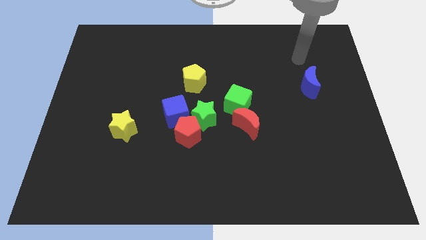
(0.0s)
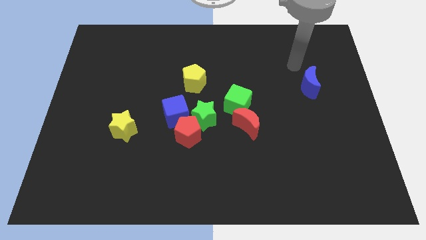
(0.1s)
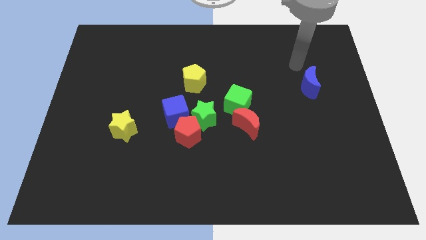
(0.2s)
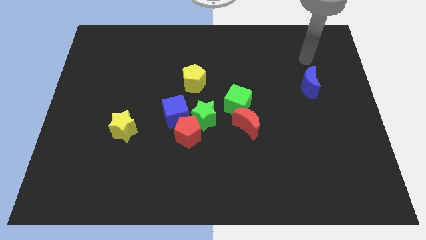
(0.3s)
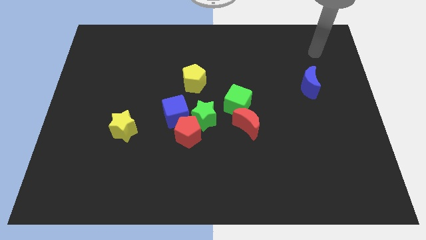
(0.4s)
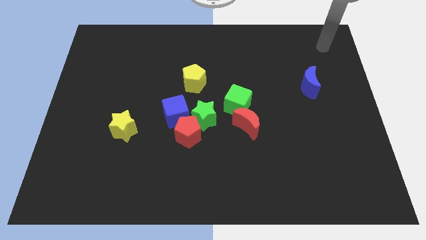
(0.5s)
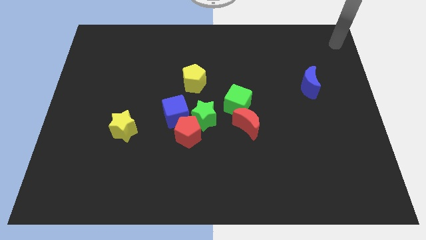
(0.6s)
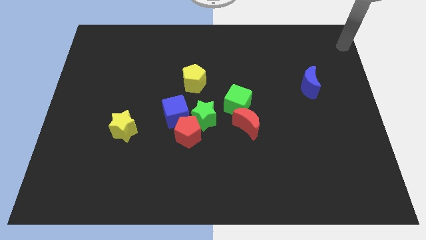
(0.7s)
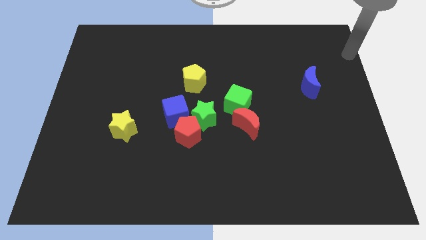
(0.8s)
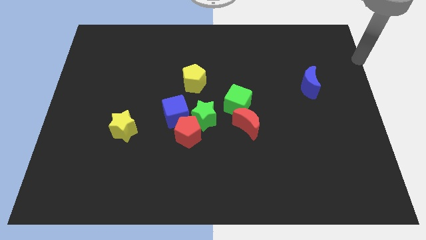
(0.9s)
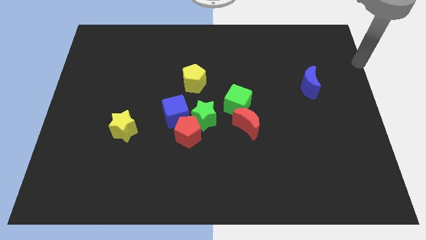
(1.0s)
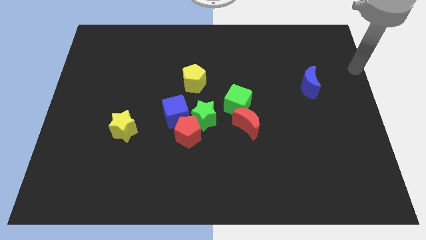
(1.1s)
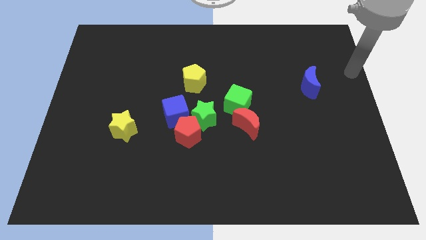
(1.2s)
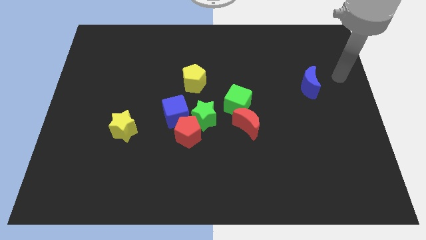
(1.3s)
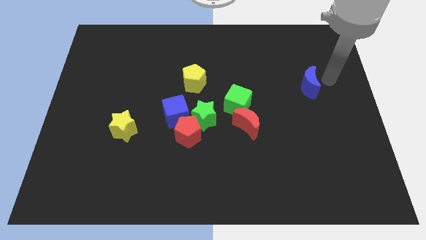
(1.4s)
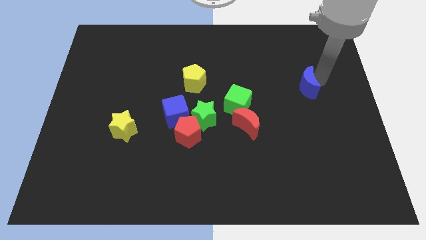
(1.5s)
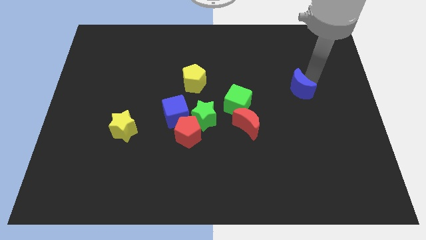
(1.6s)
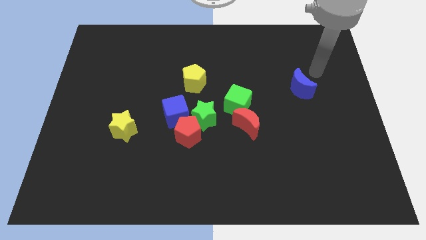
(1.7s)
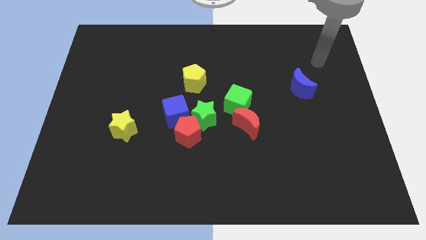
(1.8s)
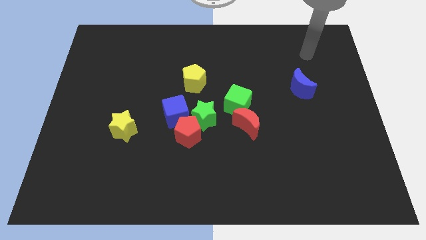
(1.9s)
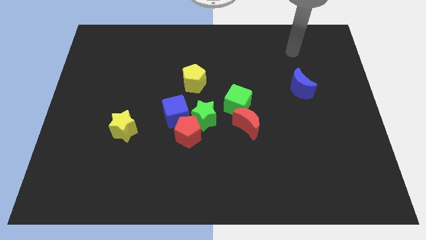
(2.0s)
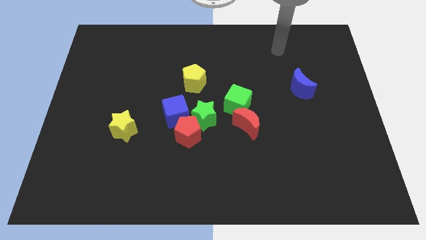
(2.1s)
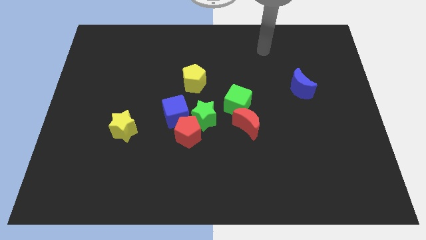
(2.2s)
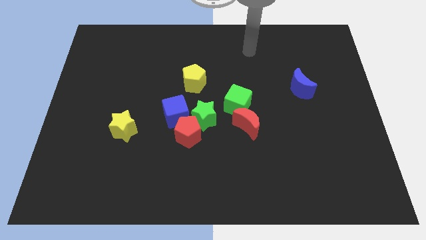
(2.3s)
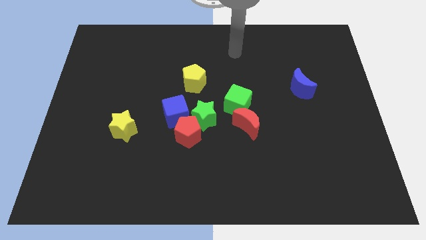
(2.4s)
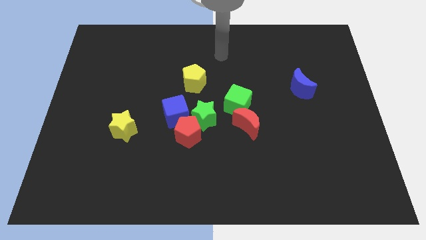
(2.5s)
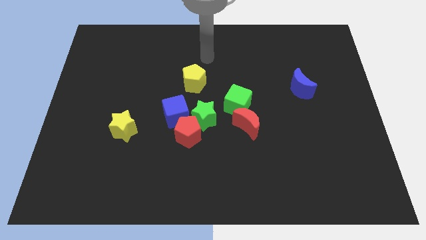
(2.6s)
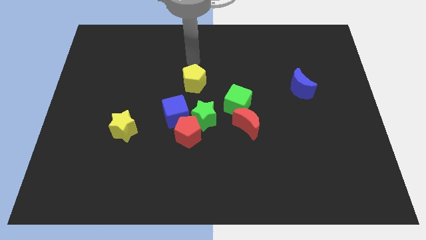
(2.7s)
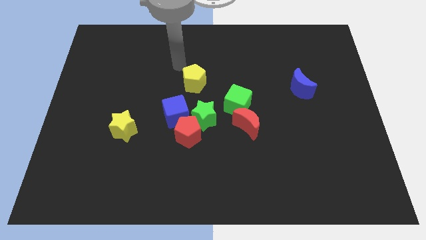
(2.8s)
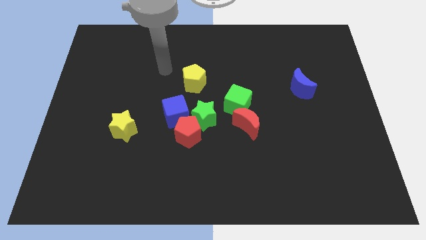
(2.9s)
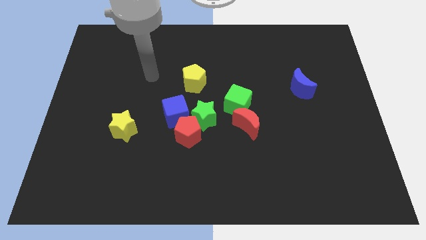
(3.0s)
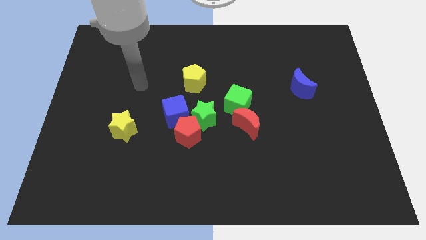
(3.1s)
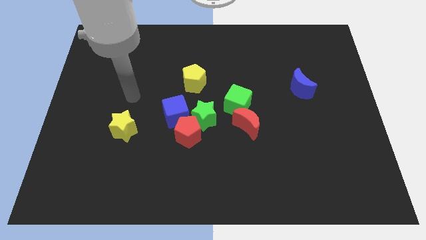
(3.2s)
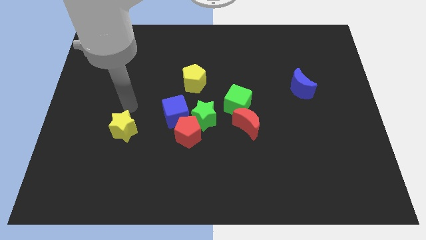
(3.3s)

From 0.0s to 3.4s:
go near the yellow star

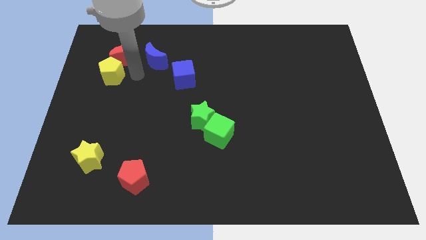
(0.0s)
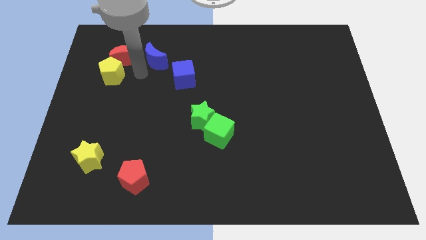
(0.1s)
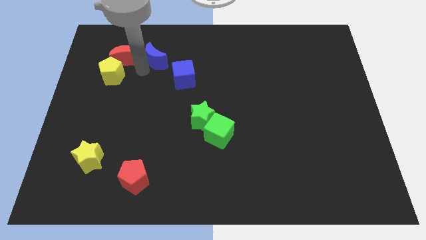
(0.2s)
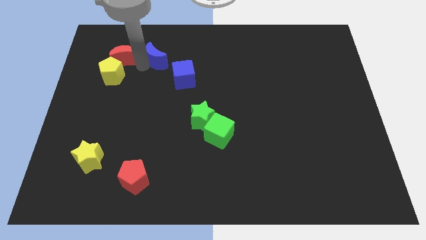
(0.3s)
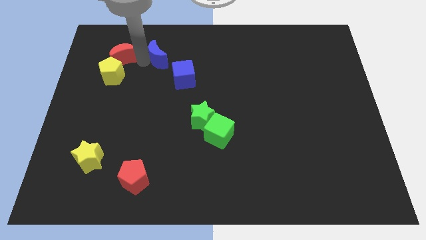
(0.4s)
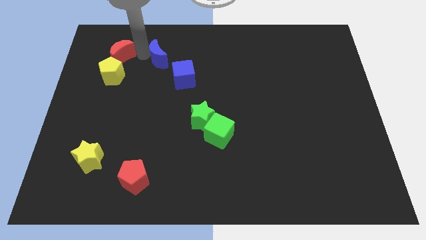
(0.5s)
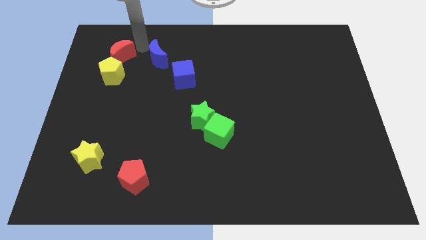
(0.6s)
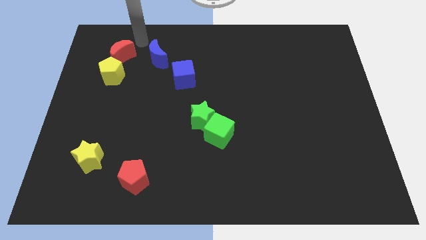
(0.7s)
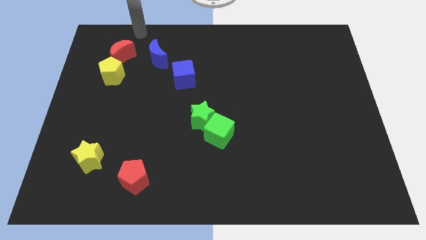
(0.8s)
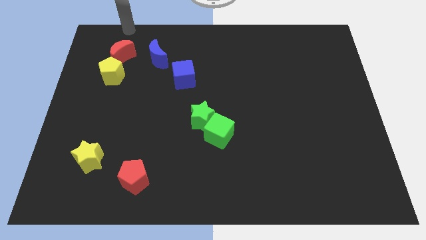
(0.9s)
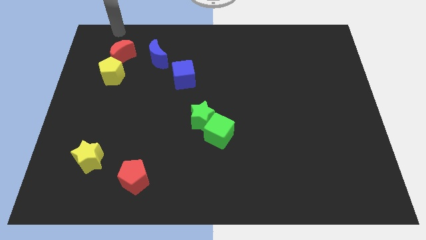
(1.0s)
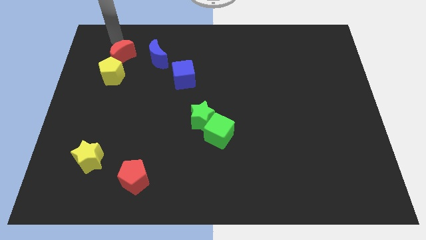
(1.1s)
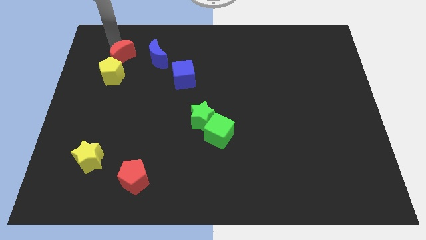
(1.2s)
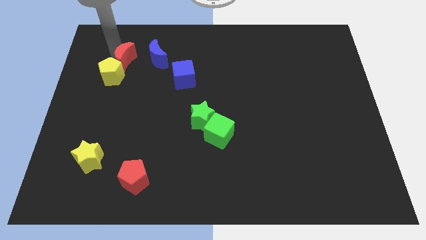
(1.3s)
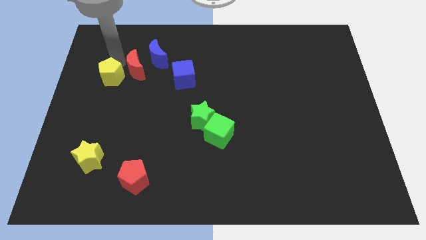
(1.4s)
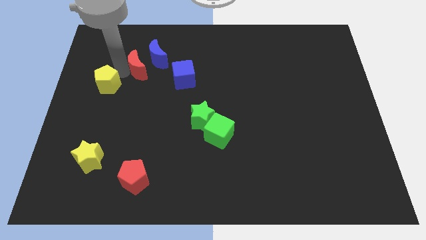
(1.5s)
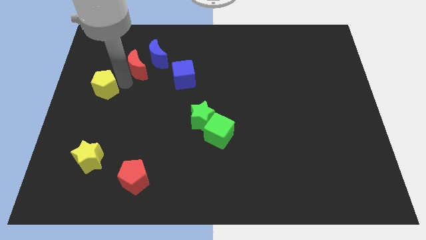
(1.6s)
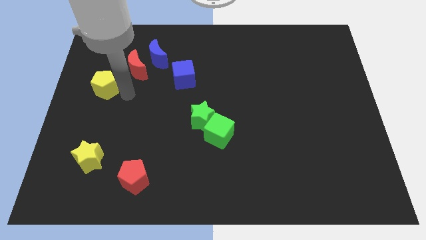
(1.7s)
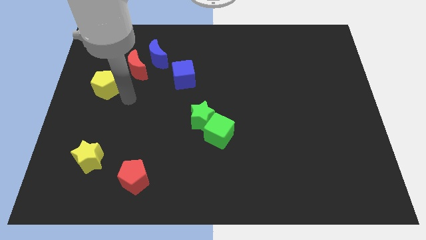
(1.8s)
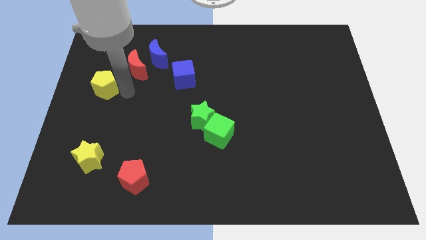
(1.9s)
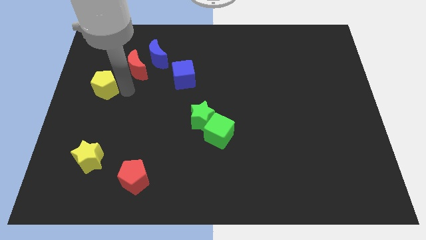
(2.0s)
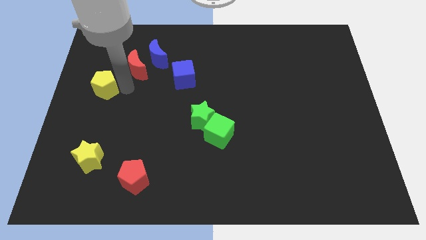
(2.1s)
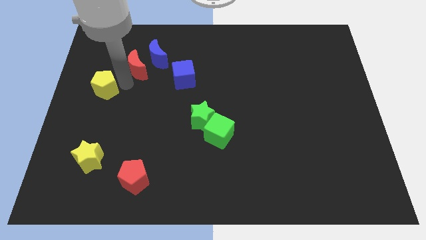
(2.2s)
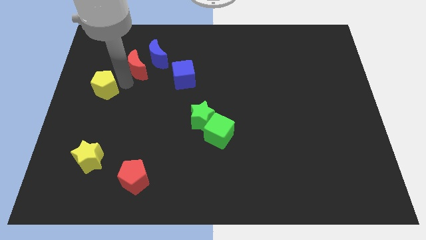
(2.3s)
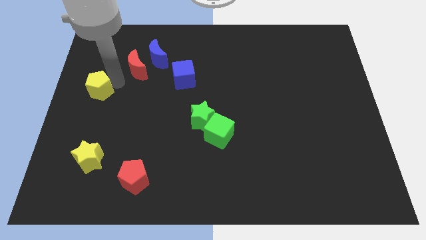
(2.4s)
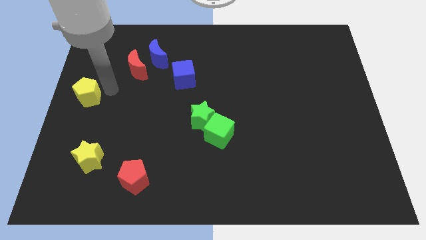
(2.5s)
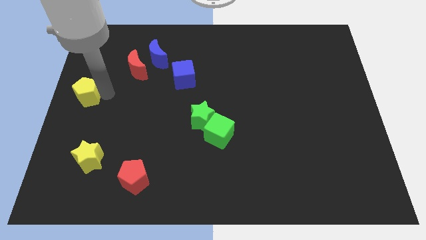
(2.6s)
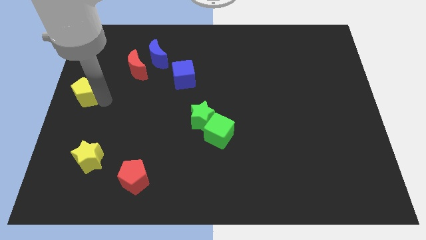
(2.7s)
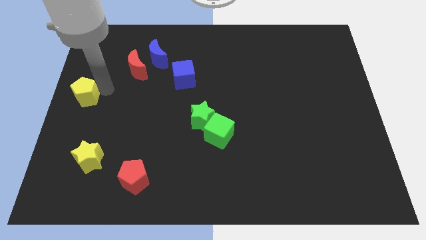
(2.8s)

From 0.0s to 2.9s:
push yellow pentagon above yellow star

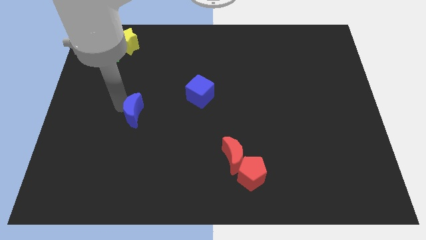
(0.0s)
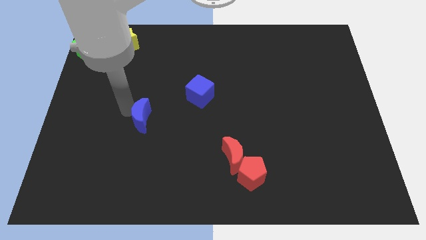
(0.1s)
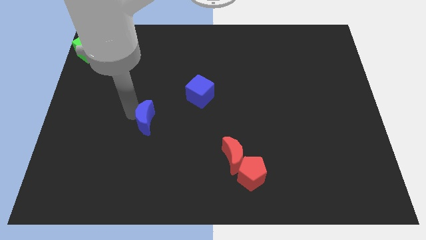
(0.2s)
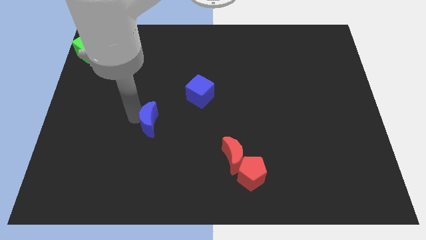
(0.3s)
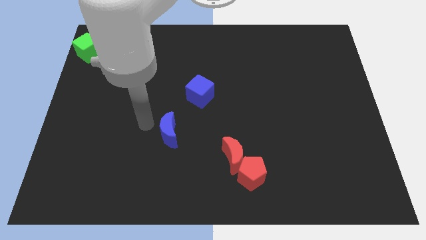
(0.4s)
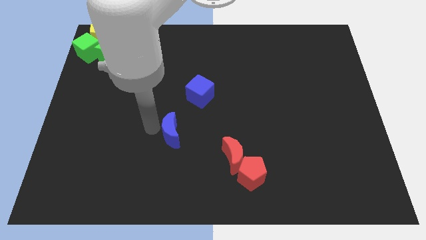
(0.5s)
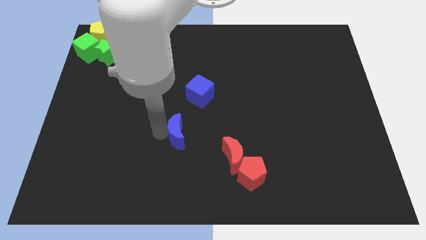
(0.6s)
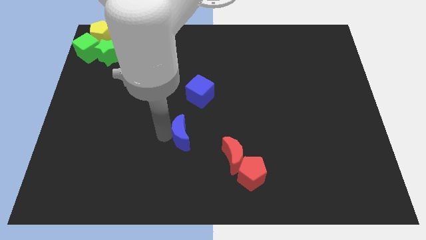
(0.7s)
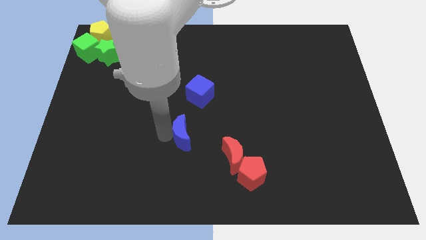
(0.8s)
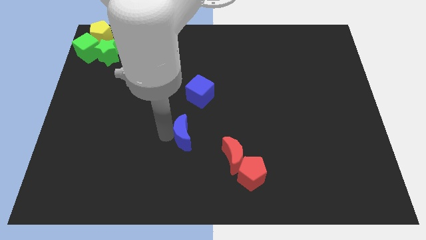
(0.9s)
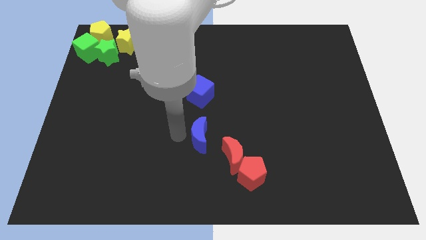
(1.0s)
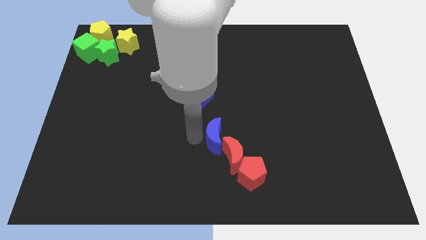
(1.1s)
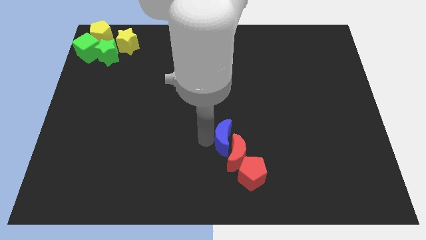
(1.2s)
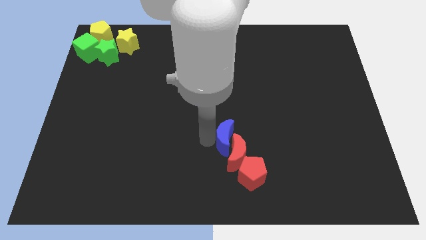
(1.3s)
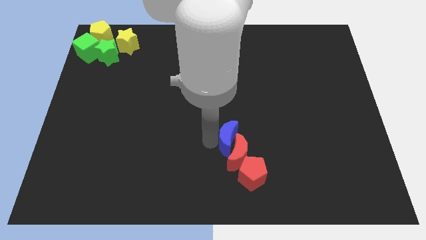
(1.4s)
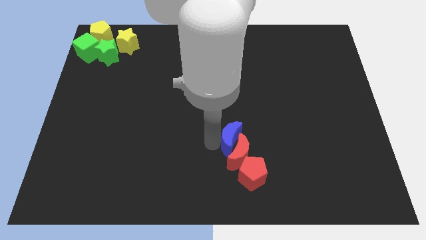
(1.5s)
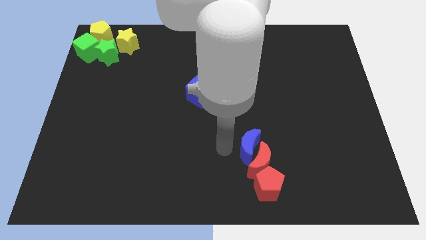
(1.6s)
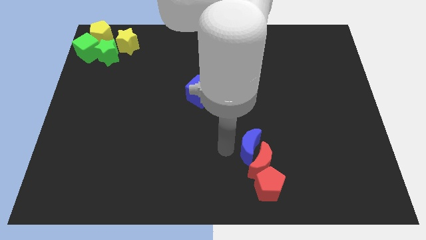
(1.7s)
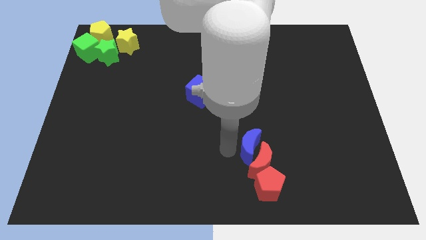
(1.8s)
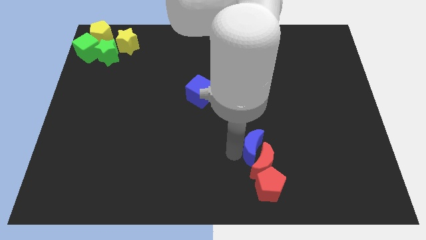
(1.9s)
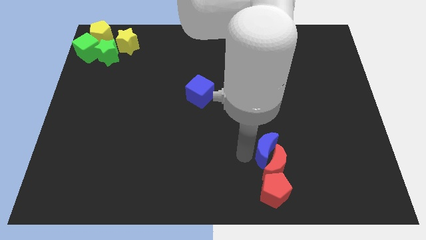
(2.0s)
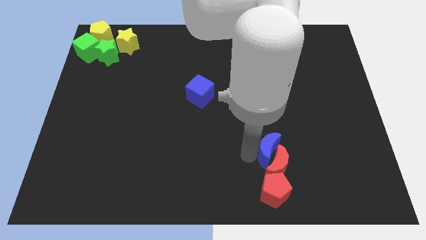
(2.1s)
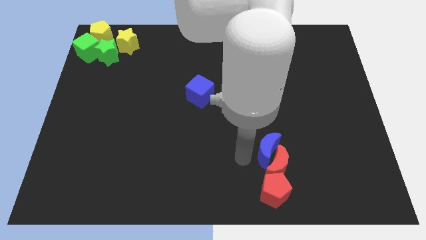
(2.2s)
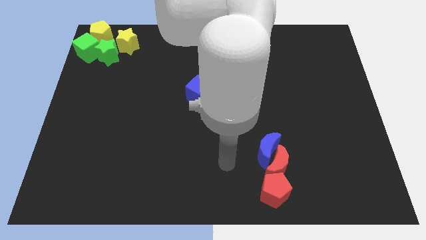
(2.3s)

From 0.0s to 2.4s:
move the blue moon into the red moon and push with red blocks to bottom

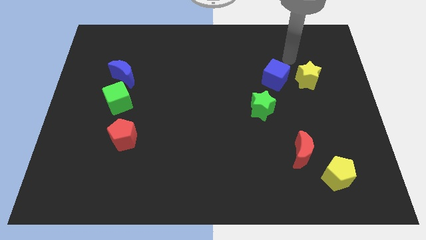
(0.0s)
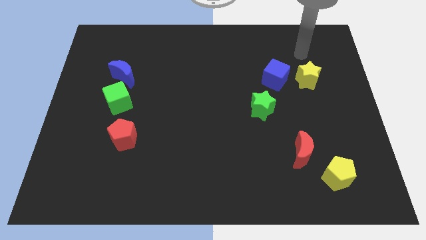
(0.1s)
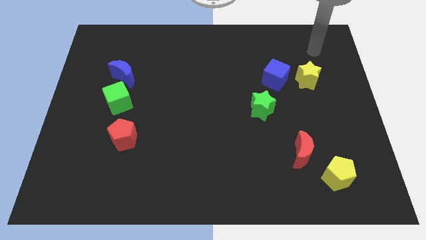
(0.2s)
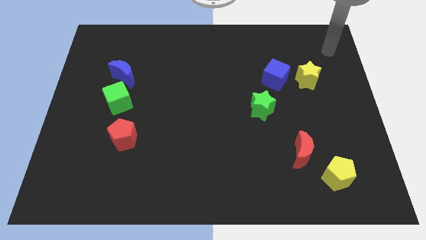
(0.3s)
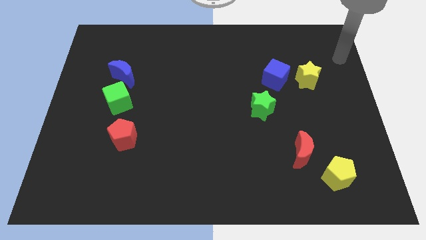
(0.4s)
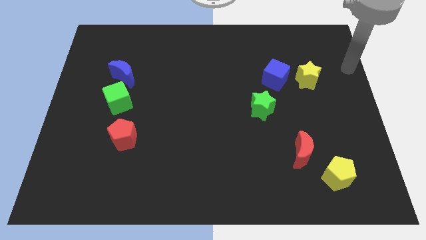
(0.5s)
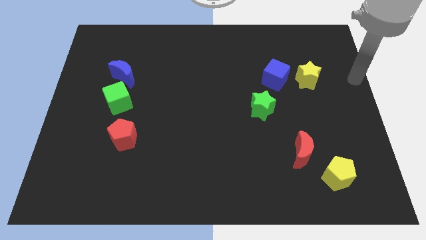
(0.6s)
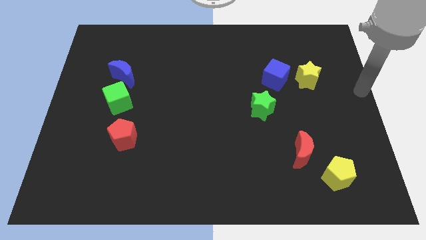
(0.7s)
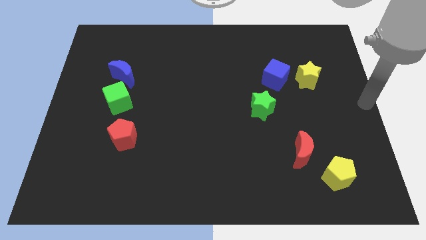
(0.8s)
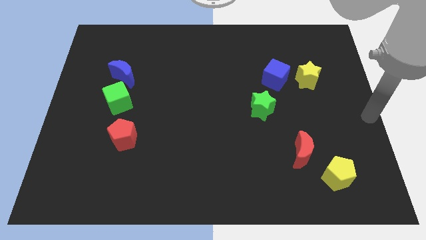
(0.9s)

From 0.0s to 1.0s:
place the arm at the right center of the board
